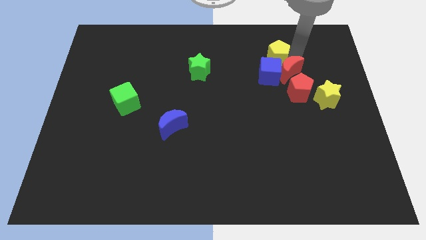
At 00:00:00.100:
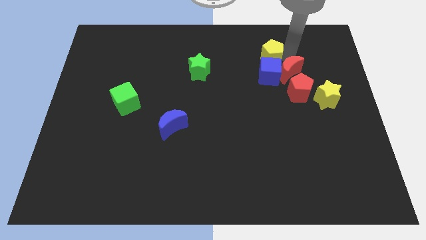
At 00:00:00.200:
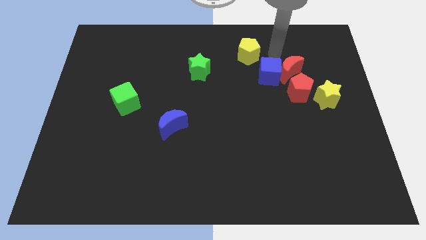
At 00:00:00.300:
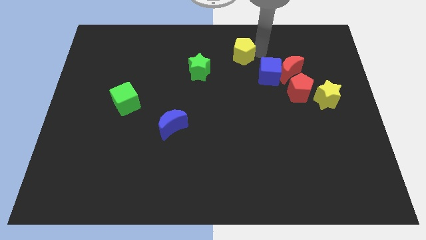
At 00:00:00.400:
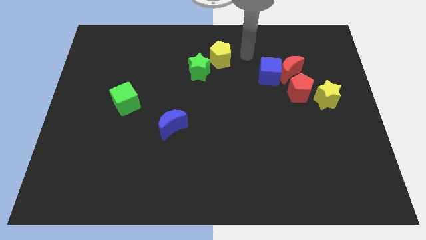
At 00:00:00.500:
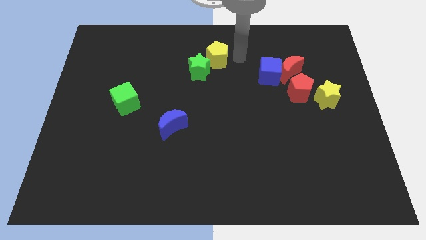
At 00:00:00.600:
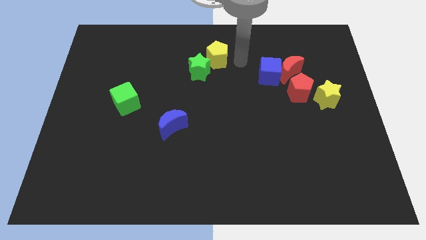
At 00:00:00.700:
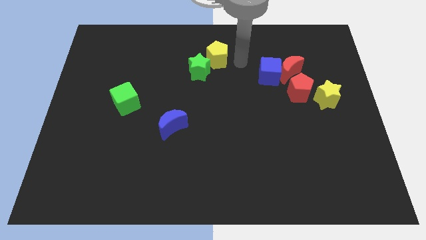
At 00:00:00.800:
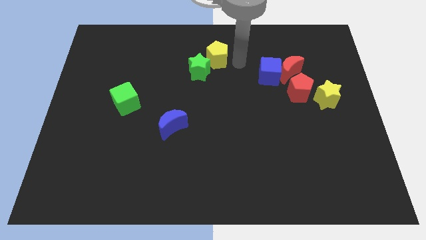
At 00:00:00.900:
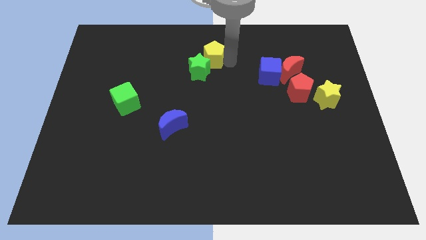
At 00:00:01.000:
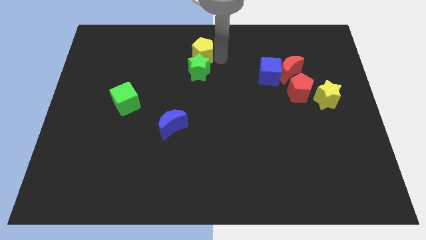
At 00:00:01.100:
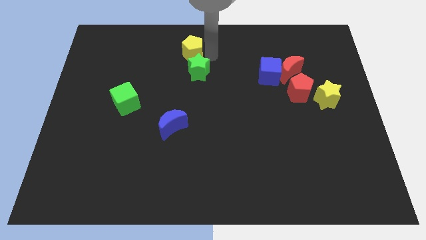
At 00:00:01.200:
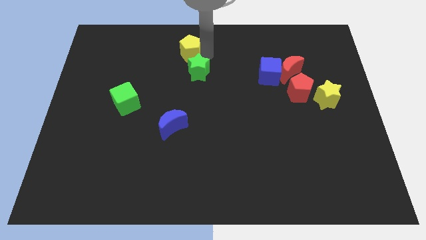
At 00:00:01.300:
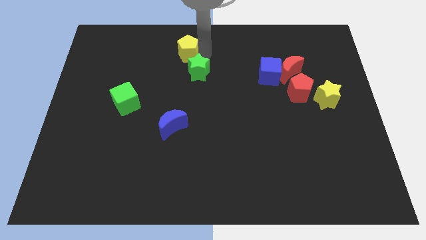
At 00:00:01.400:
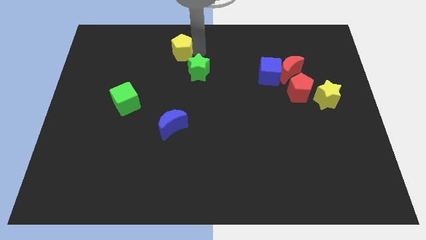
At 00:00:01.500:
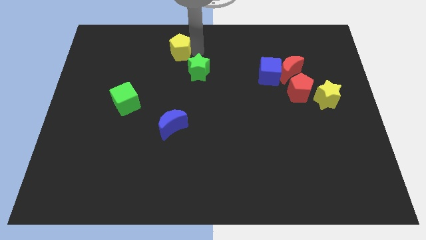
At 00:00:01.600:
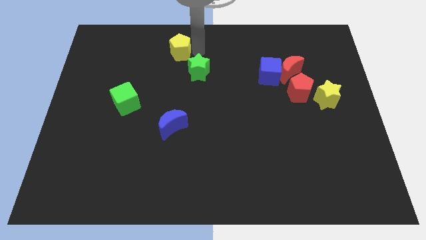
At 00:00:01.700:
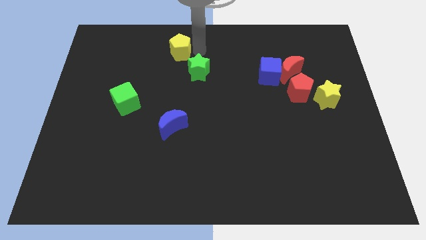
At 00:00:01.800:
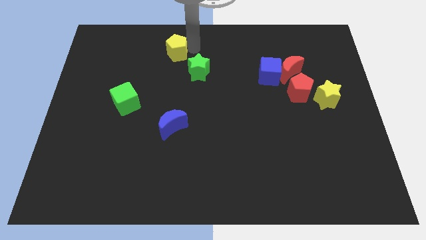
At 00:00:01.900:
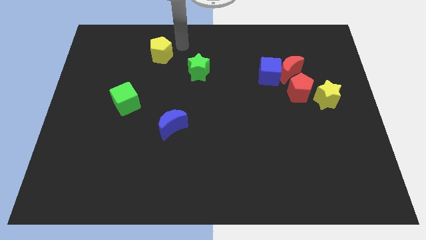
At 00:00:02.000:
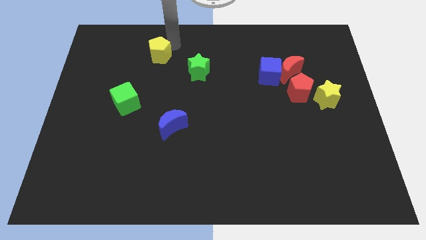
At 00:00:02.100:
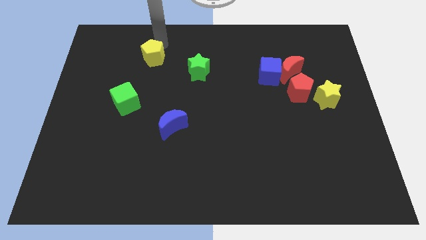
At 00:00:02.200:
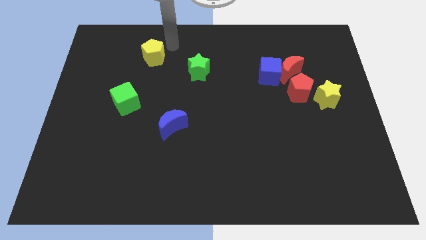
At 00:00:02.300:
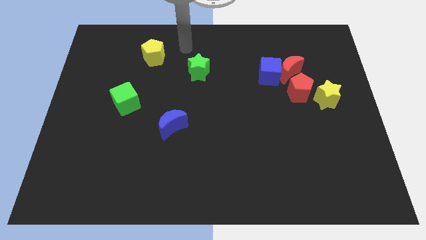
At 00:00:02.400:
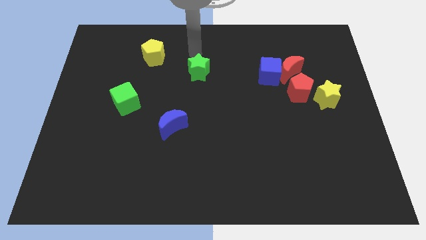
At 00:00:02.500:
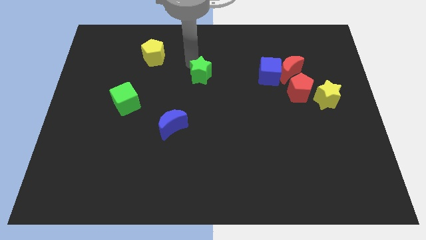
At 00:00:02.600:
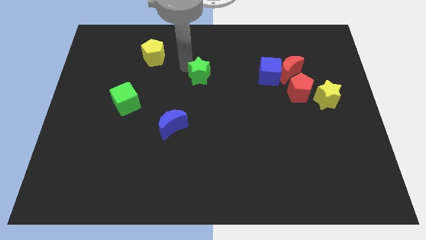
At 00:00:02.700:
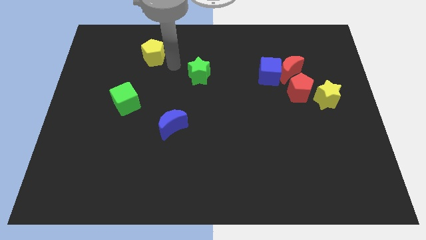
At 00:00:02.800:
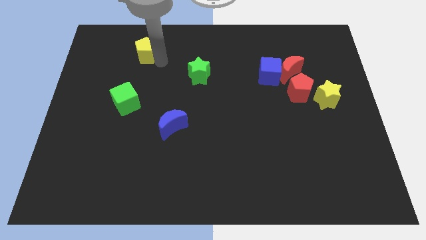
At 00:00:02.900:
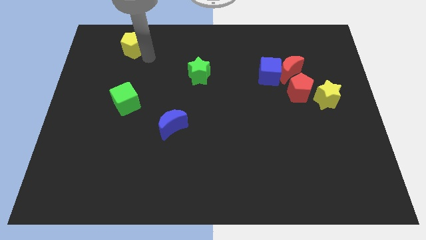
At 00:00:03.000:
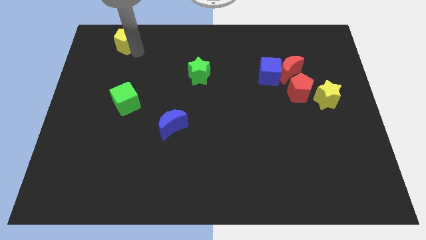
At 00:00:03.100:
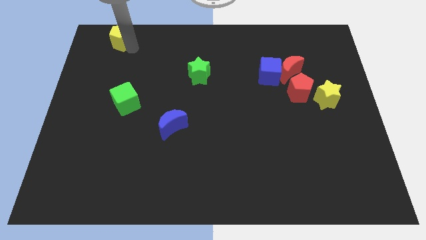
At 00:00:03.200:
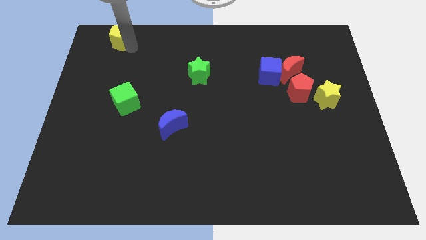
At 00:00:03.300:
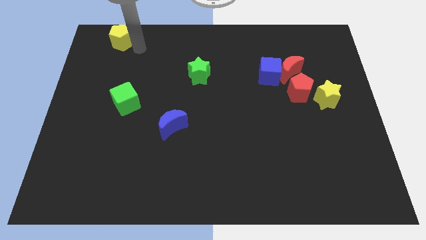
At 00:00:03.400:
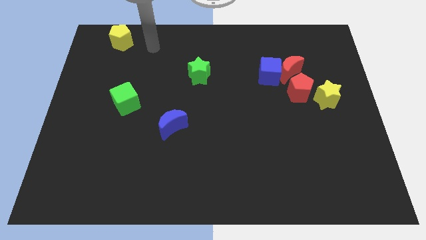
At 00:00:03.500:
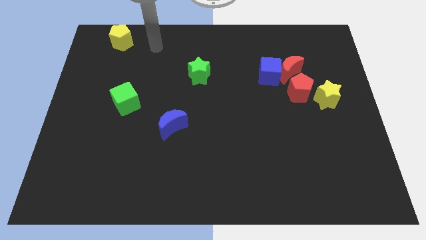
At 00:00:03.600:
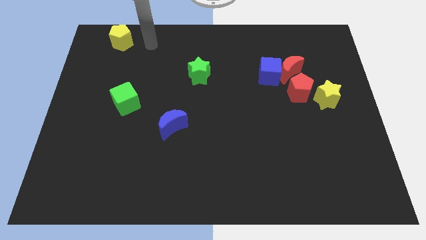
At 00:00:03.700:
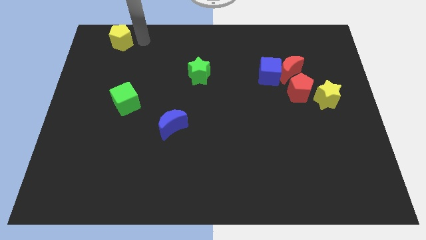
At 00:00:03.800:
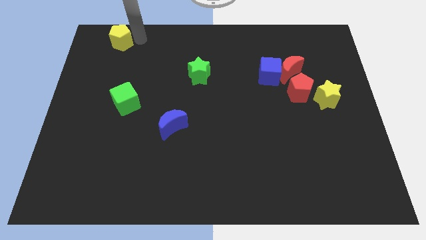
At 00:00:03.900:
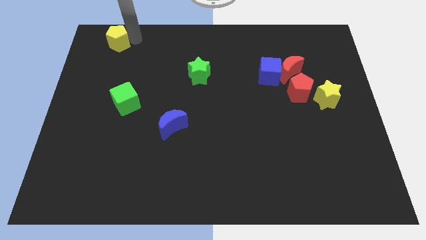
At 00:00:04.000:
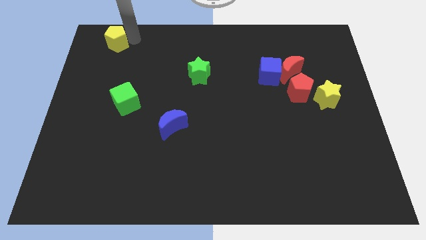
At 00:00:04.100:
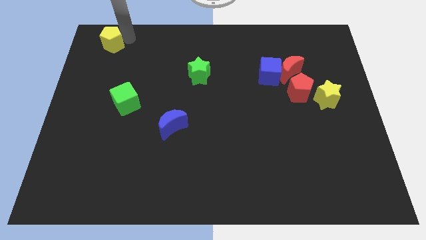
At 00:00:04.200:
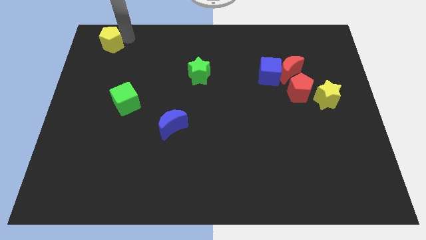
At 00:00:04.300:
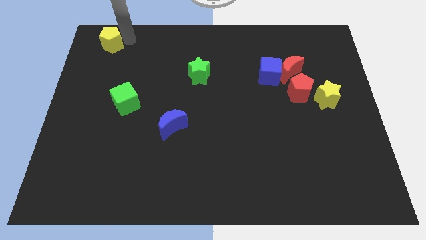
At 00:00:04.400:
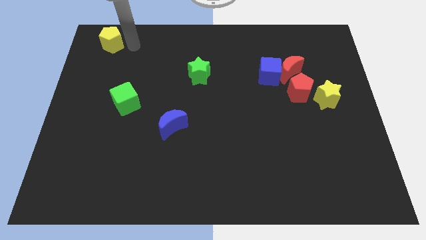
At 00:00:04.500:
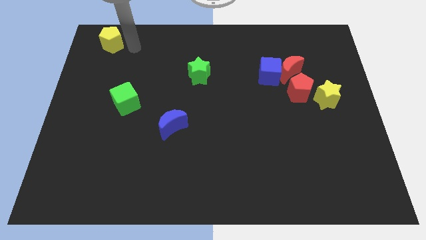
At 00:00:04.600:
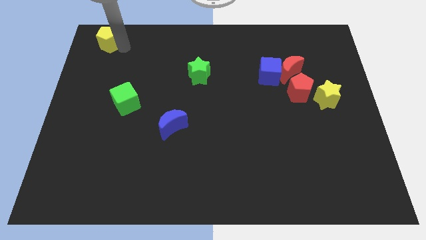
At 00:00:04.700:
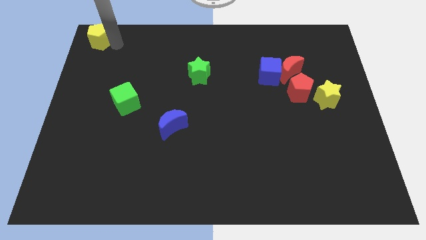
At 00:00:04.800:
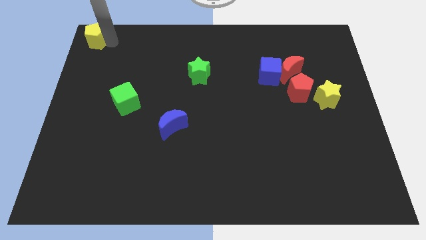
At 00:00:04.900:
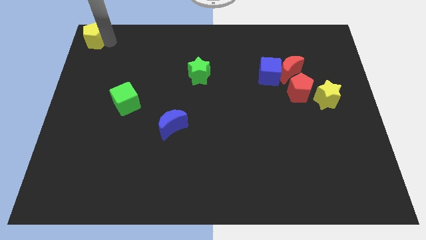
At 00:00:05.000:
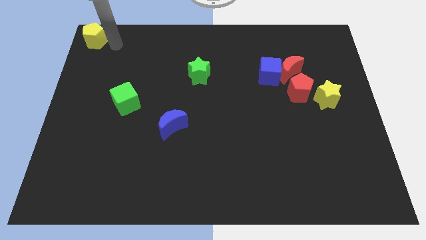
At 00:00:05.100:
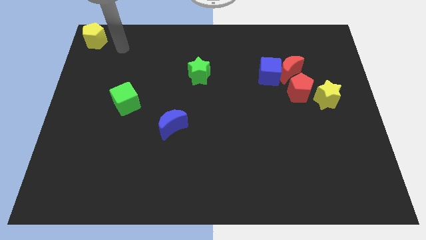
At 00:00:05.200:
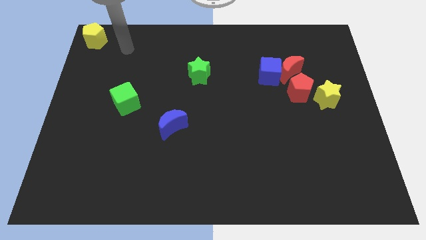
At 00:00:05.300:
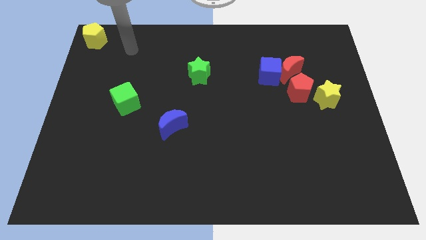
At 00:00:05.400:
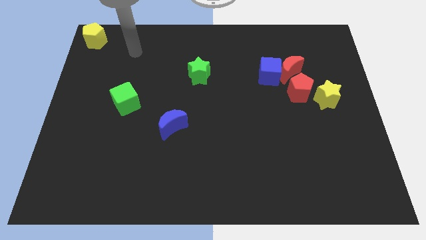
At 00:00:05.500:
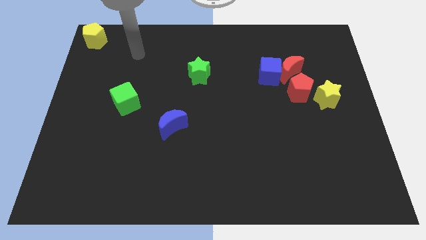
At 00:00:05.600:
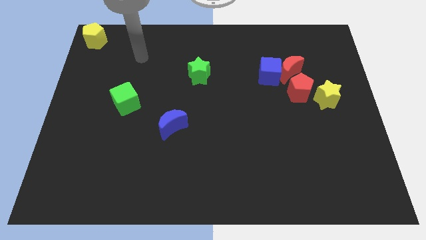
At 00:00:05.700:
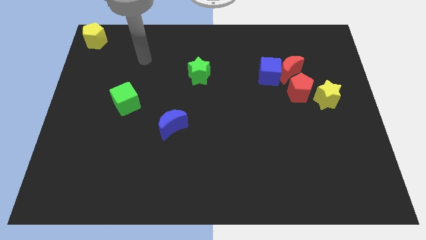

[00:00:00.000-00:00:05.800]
place the yellow pentagon at the top left corner of the board

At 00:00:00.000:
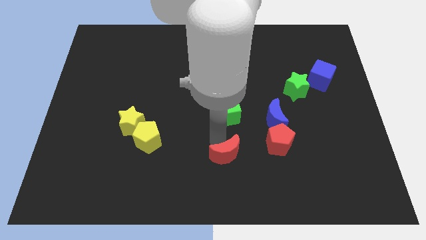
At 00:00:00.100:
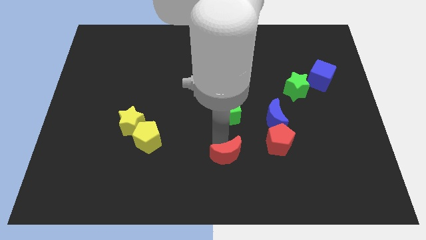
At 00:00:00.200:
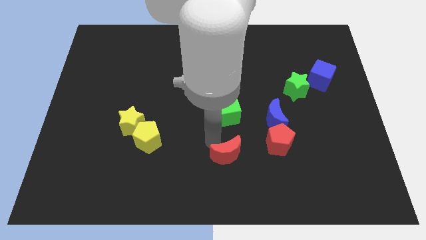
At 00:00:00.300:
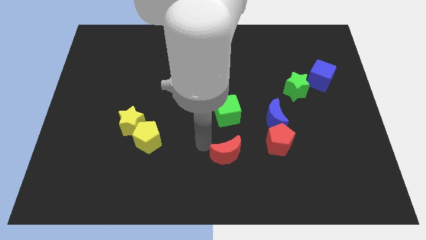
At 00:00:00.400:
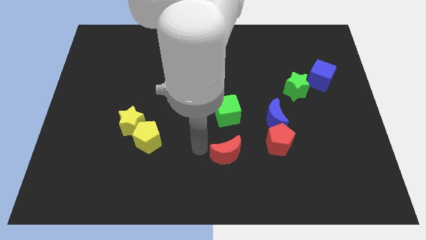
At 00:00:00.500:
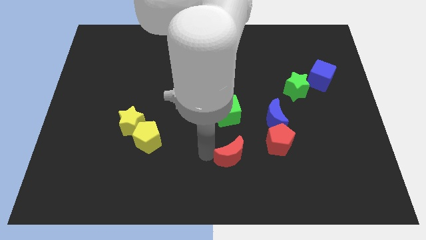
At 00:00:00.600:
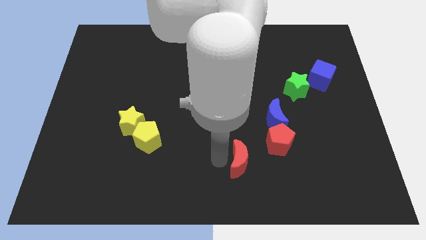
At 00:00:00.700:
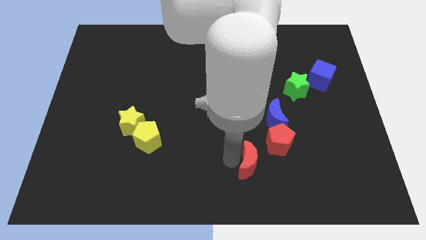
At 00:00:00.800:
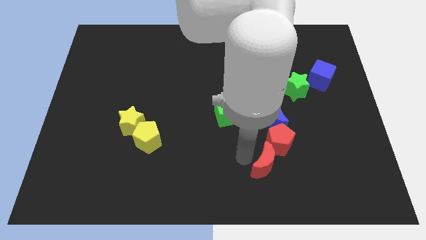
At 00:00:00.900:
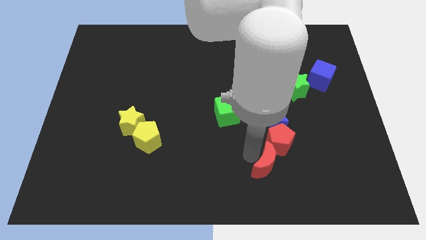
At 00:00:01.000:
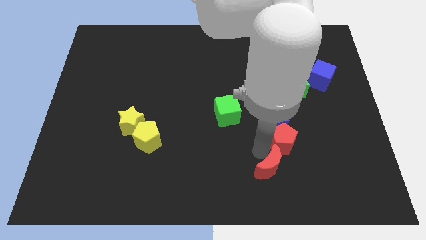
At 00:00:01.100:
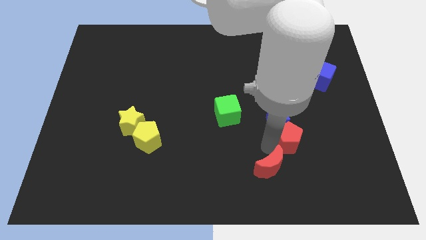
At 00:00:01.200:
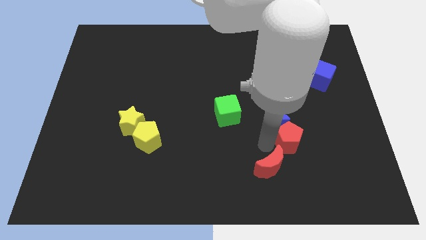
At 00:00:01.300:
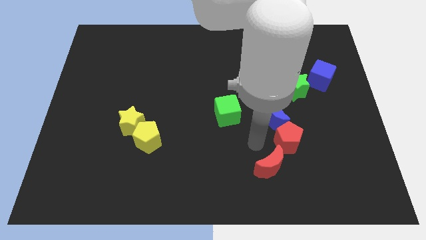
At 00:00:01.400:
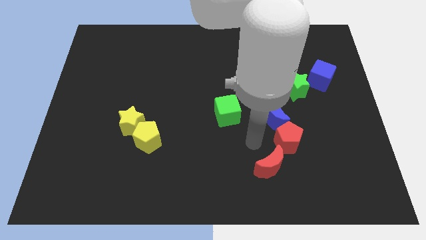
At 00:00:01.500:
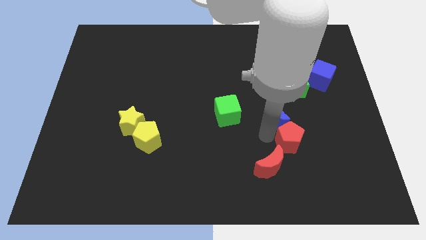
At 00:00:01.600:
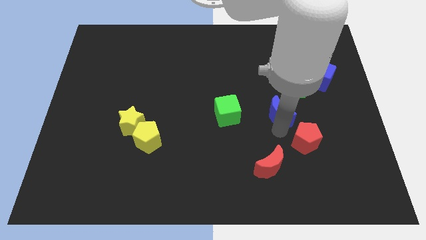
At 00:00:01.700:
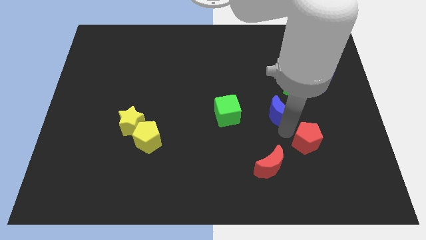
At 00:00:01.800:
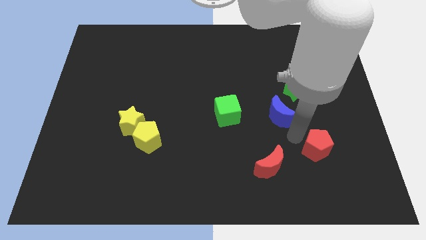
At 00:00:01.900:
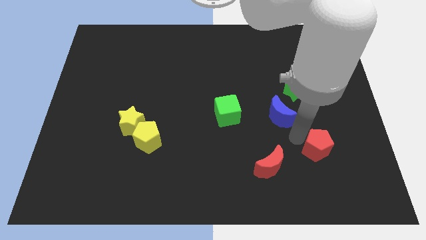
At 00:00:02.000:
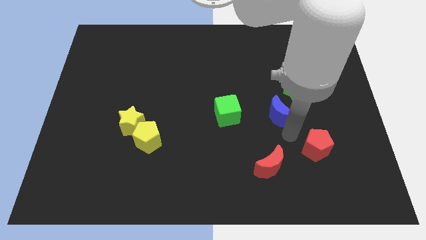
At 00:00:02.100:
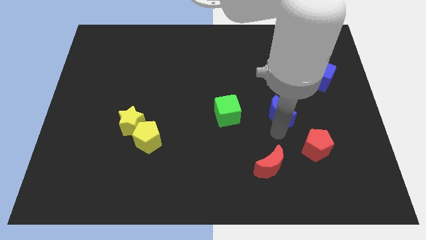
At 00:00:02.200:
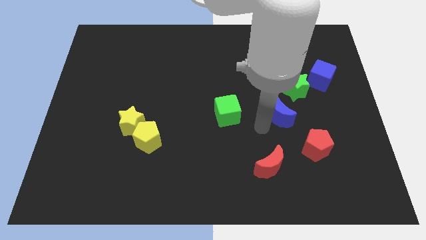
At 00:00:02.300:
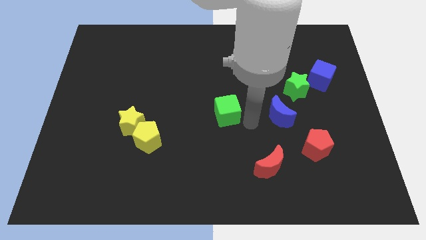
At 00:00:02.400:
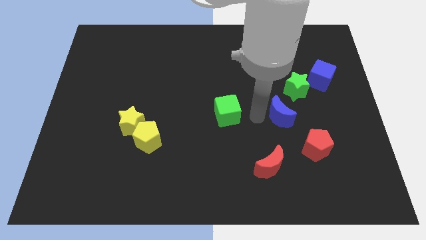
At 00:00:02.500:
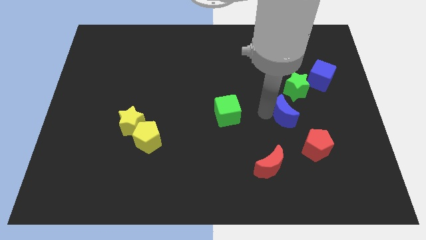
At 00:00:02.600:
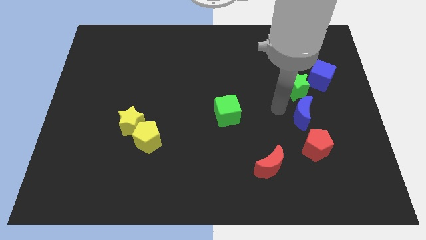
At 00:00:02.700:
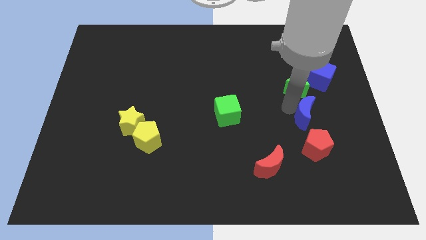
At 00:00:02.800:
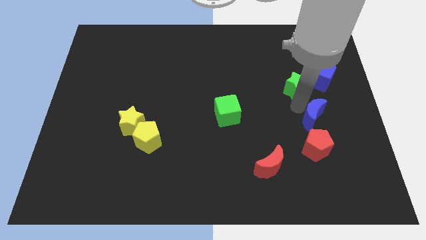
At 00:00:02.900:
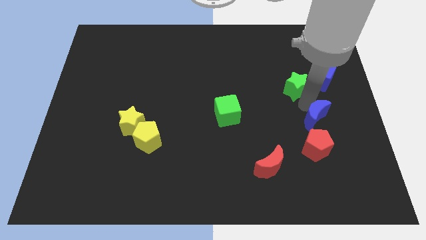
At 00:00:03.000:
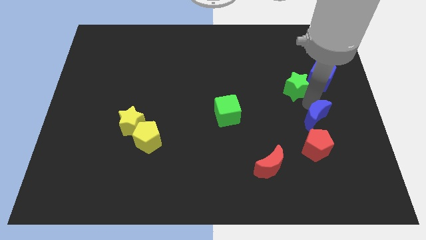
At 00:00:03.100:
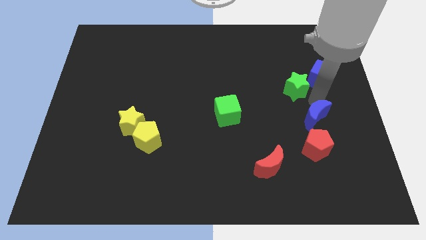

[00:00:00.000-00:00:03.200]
place the blue crescent below the green star

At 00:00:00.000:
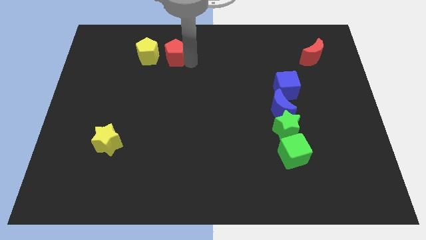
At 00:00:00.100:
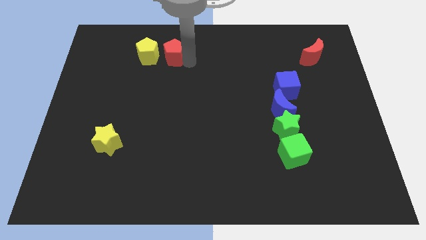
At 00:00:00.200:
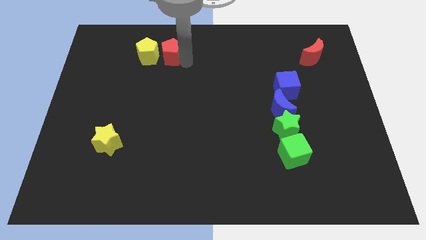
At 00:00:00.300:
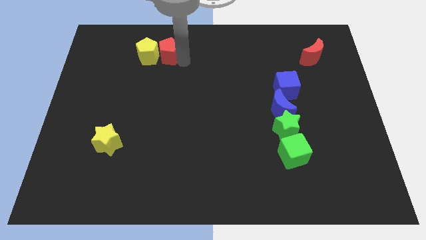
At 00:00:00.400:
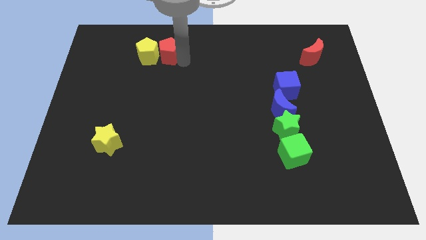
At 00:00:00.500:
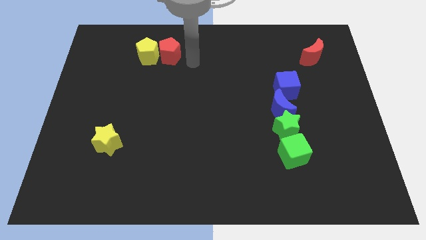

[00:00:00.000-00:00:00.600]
push the red pentagon to the right side of the yellow pentagon
